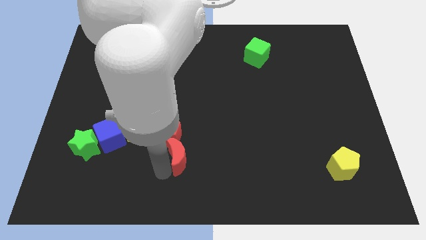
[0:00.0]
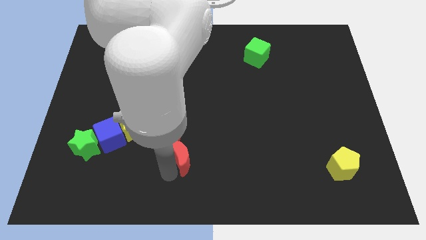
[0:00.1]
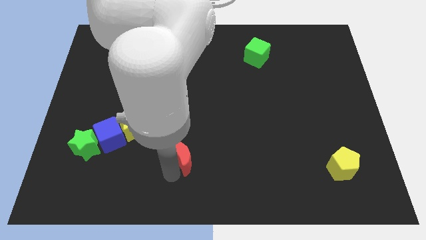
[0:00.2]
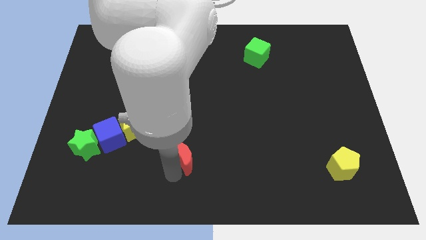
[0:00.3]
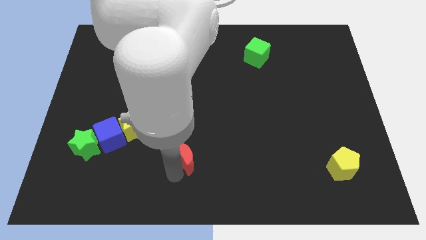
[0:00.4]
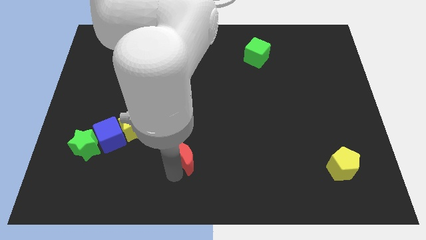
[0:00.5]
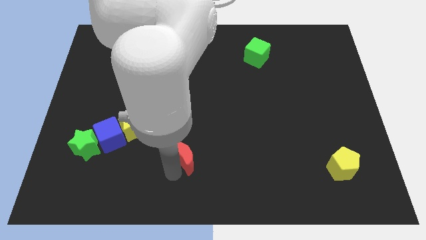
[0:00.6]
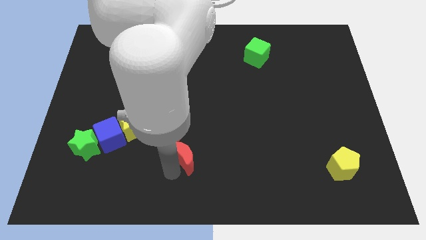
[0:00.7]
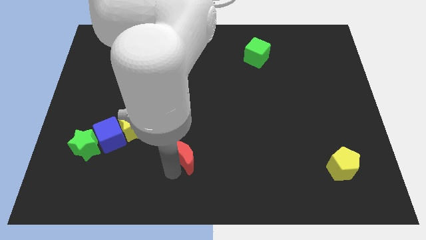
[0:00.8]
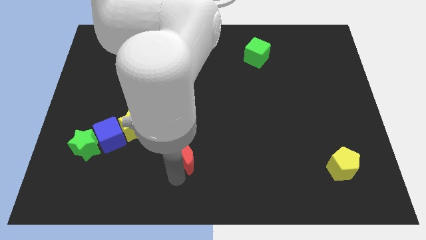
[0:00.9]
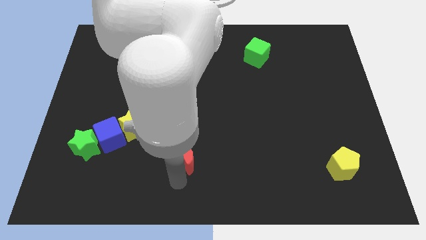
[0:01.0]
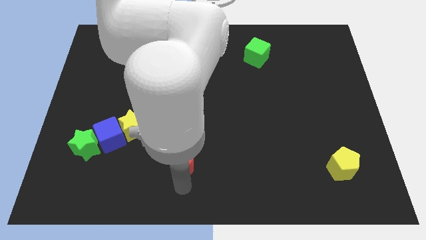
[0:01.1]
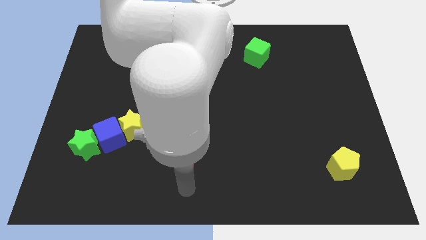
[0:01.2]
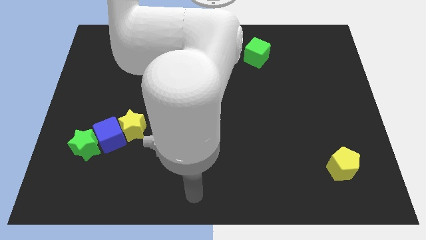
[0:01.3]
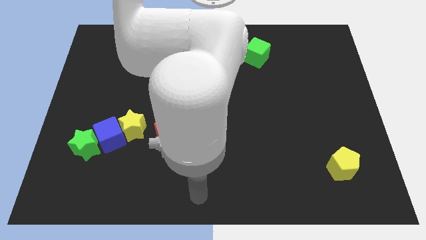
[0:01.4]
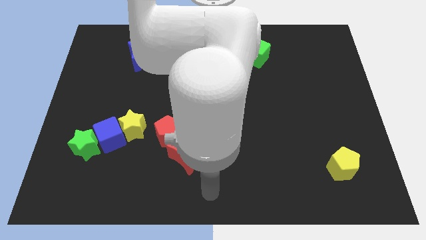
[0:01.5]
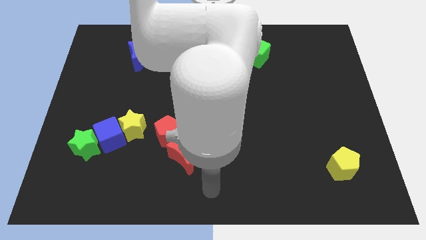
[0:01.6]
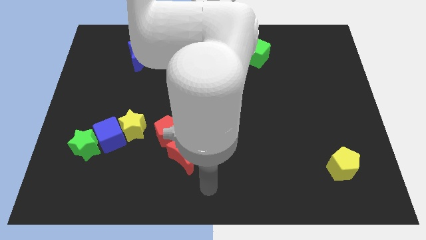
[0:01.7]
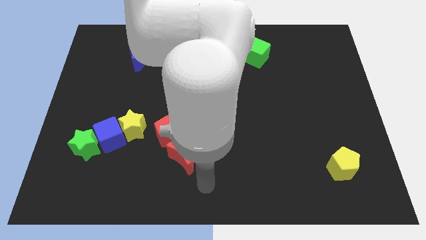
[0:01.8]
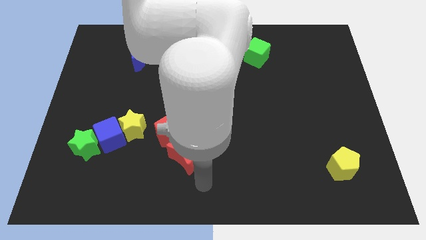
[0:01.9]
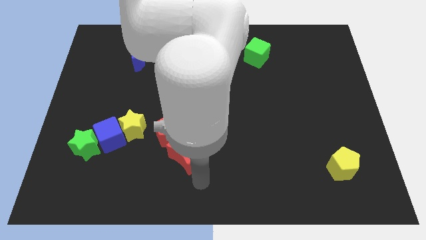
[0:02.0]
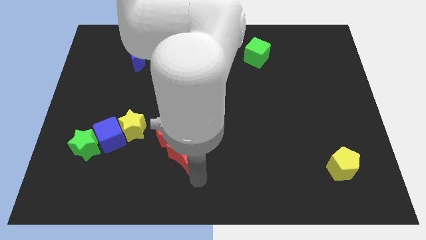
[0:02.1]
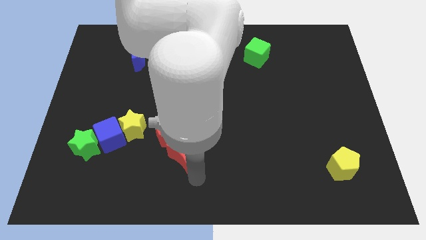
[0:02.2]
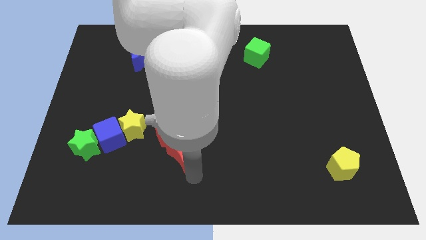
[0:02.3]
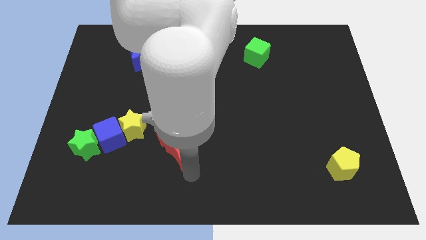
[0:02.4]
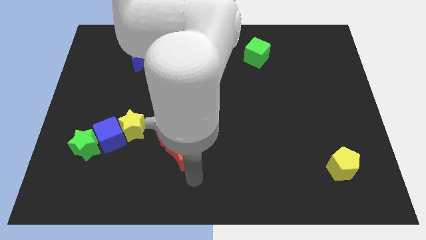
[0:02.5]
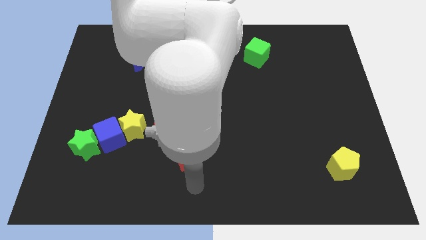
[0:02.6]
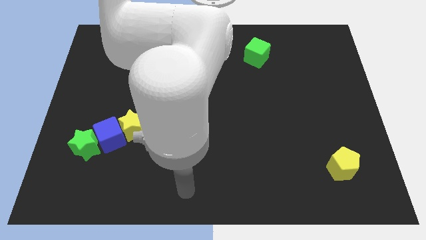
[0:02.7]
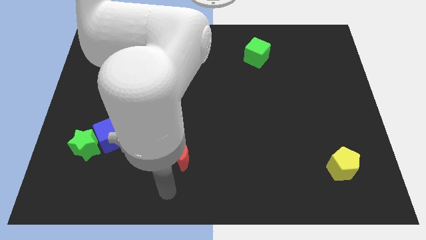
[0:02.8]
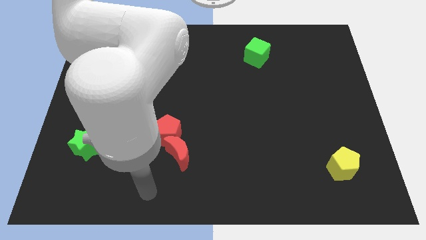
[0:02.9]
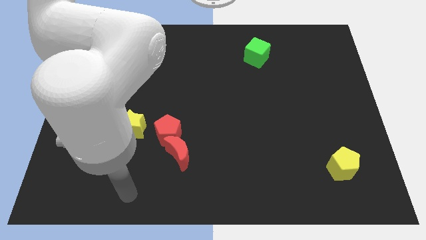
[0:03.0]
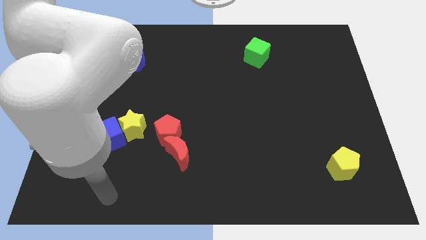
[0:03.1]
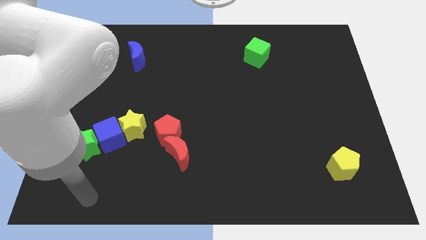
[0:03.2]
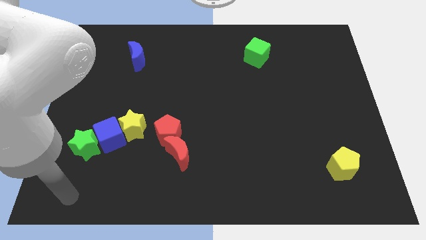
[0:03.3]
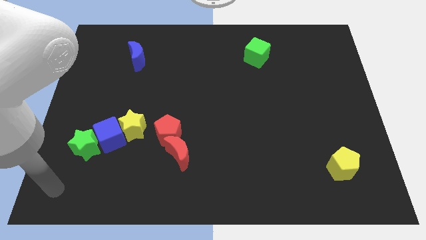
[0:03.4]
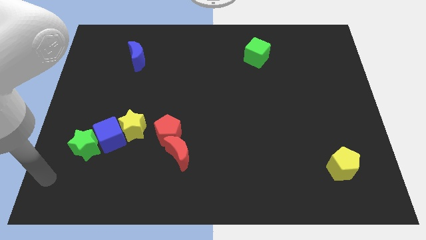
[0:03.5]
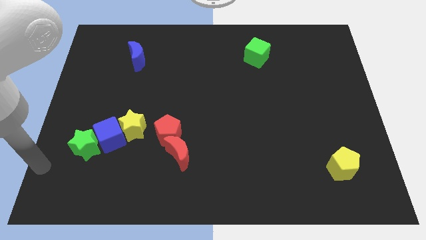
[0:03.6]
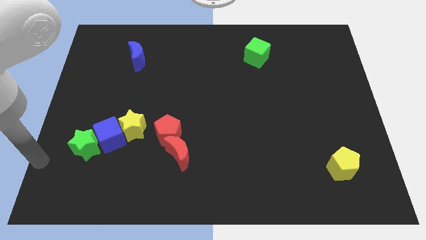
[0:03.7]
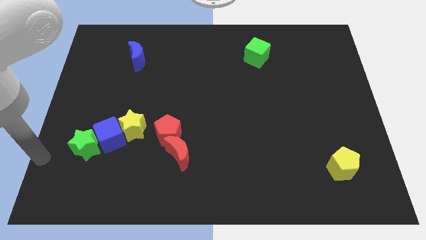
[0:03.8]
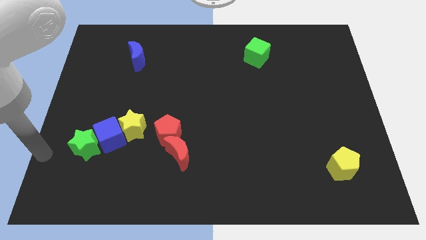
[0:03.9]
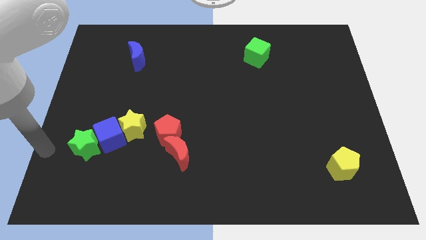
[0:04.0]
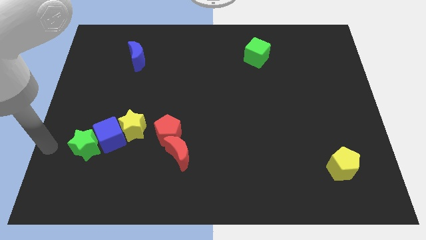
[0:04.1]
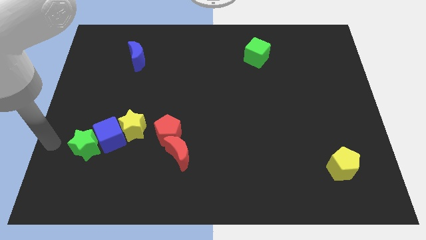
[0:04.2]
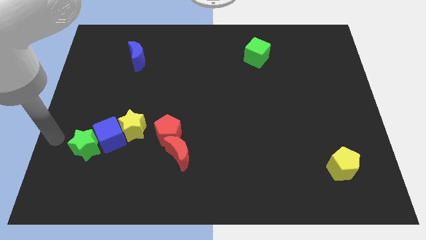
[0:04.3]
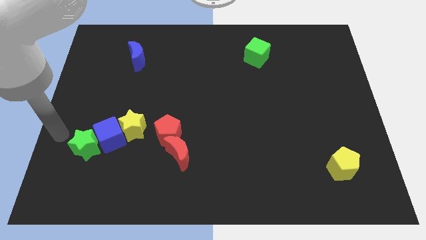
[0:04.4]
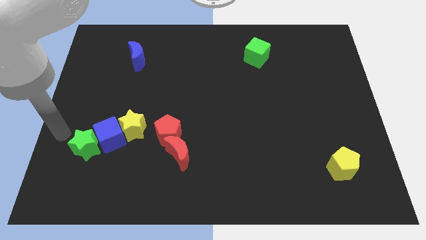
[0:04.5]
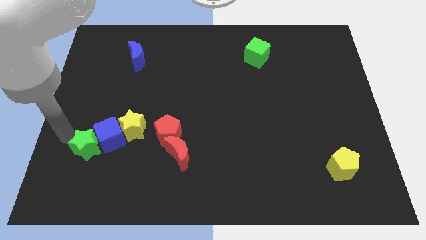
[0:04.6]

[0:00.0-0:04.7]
move the arm above to the green star

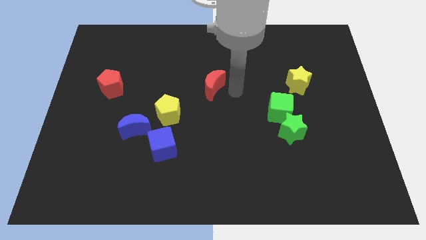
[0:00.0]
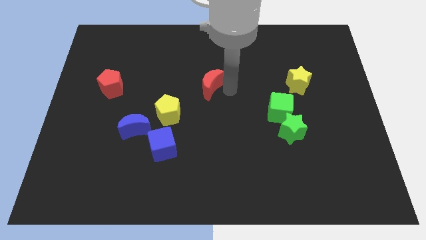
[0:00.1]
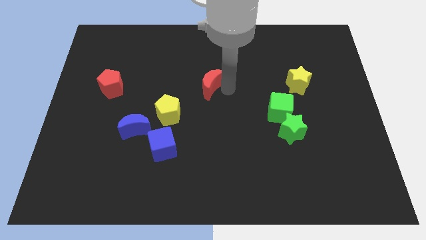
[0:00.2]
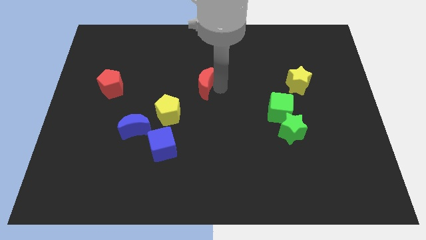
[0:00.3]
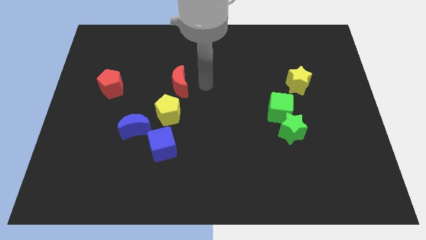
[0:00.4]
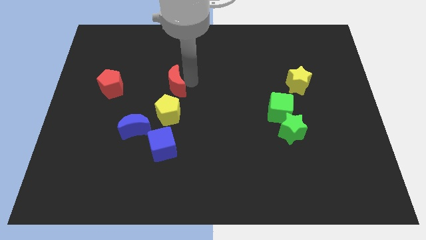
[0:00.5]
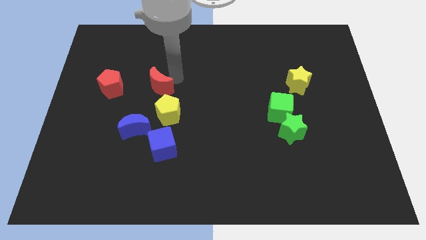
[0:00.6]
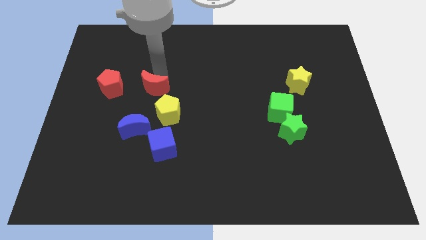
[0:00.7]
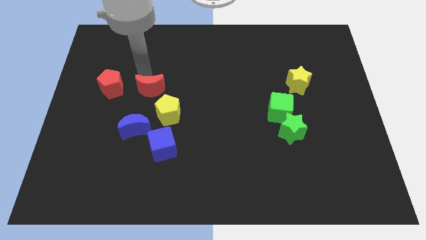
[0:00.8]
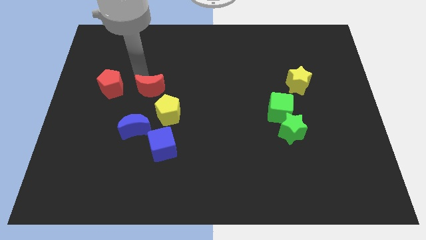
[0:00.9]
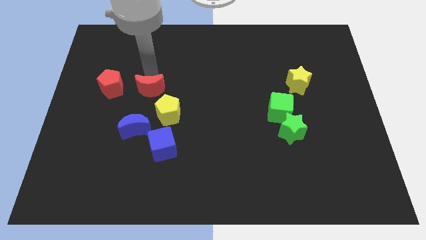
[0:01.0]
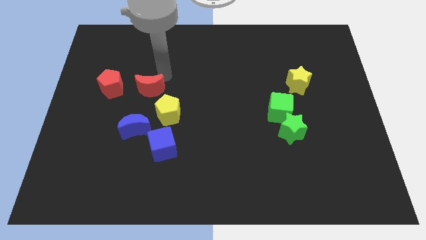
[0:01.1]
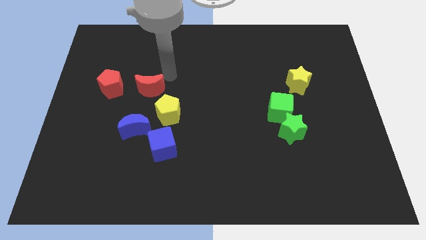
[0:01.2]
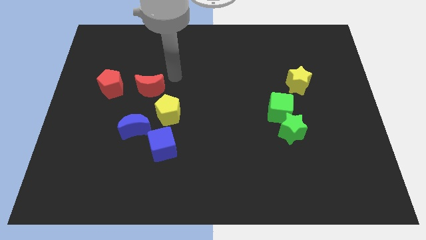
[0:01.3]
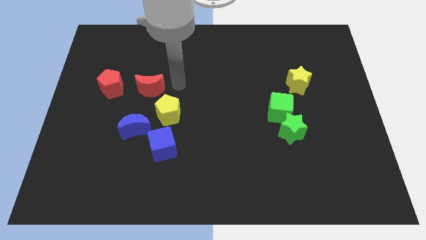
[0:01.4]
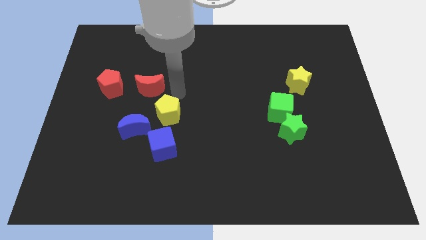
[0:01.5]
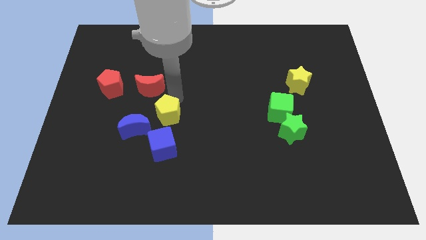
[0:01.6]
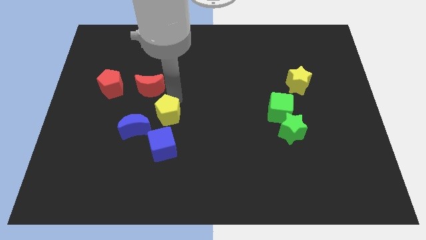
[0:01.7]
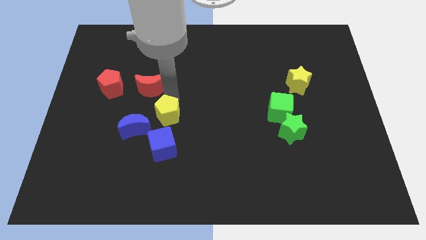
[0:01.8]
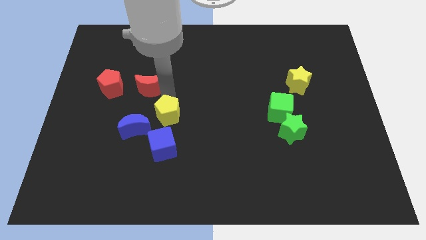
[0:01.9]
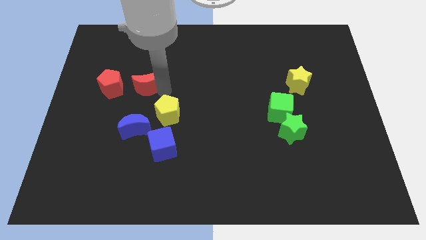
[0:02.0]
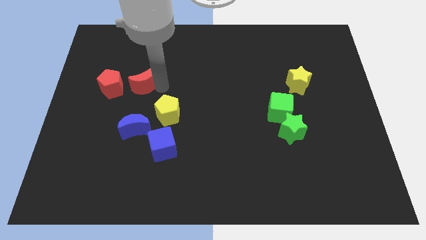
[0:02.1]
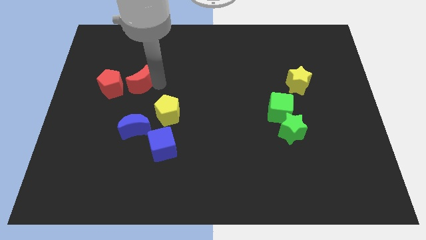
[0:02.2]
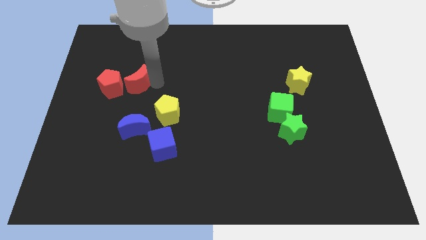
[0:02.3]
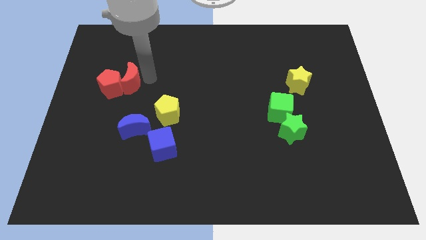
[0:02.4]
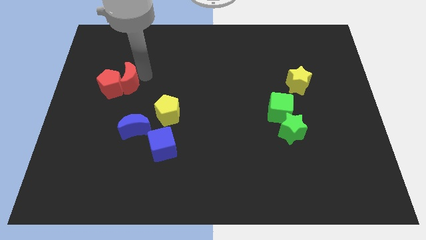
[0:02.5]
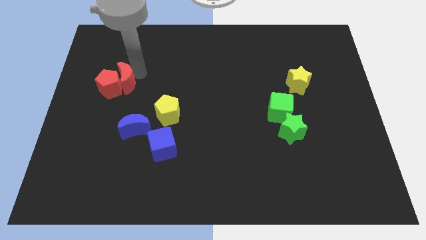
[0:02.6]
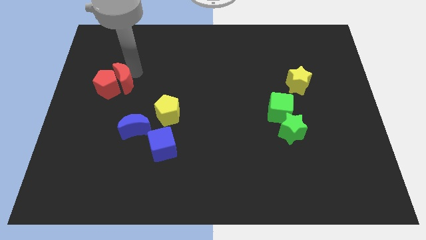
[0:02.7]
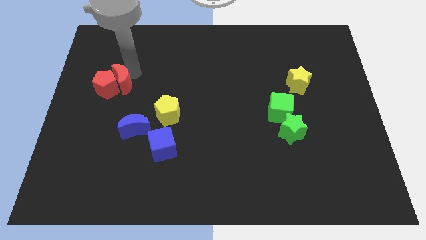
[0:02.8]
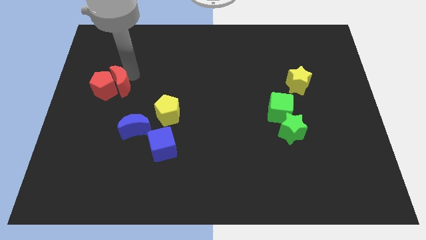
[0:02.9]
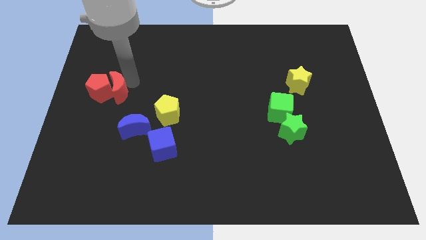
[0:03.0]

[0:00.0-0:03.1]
move the red crescent into the red pentagon

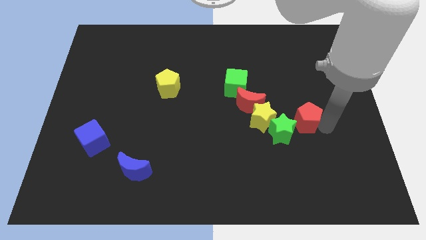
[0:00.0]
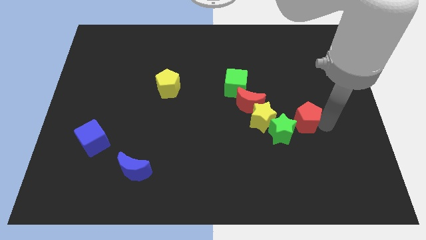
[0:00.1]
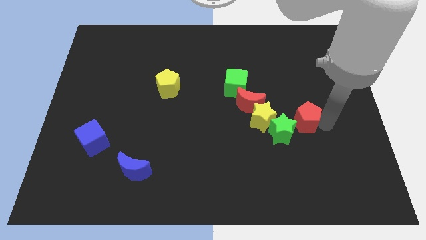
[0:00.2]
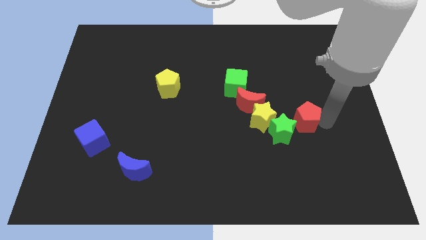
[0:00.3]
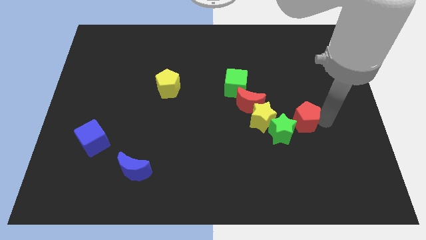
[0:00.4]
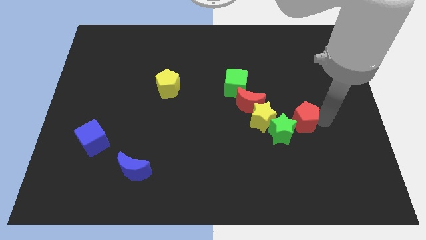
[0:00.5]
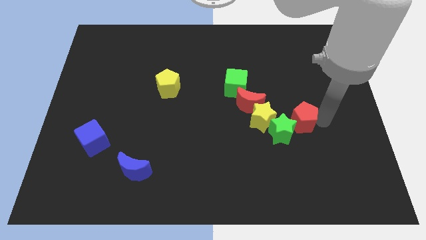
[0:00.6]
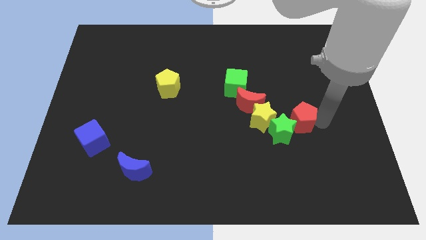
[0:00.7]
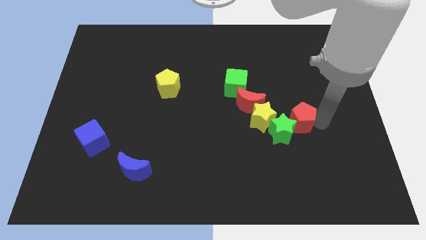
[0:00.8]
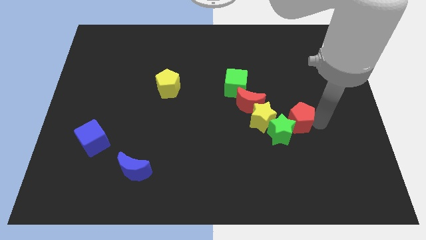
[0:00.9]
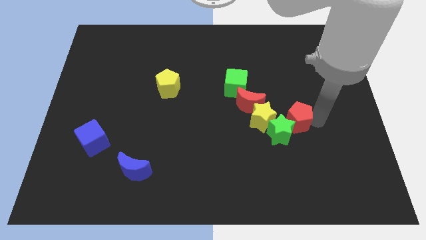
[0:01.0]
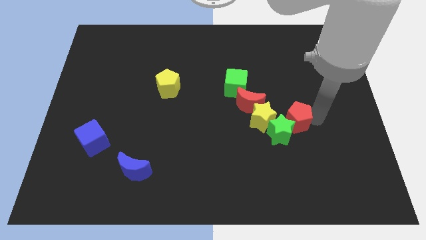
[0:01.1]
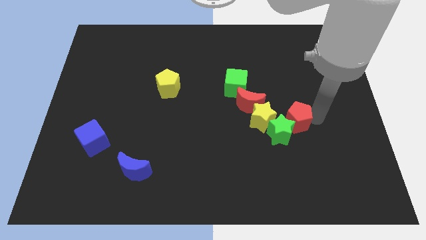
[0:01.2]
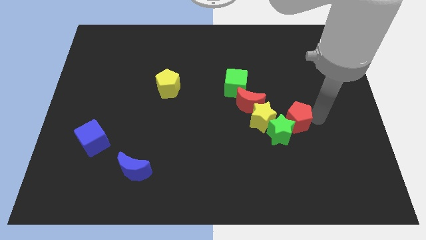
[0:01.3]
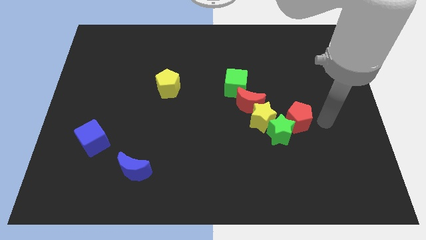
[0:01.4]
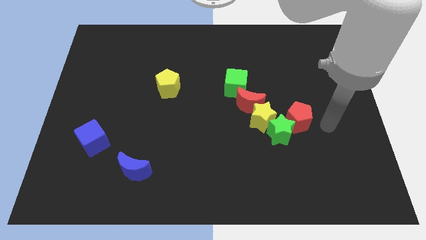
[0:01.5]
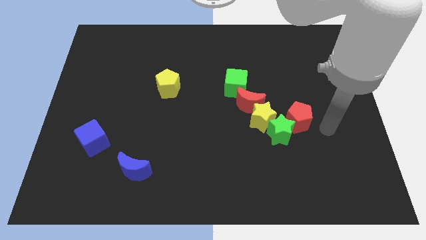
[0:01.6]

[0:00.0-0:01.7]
move the red pentagon into the green star
